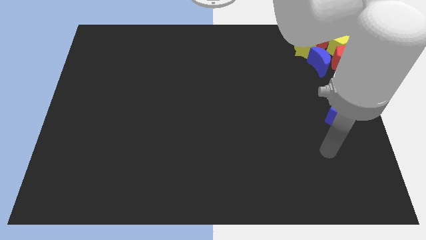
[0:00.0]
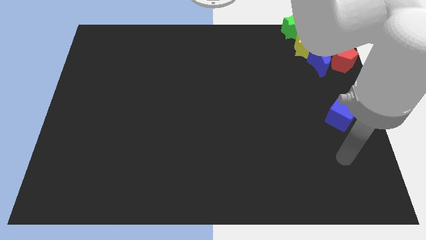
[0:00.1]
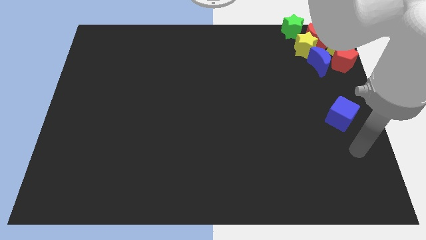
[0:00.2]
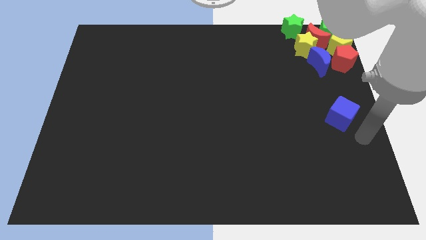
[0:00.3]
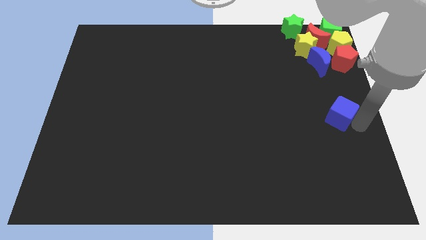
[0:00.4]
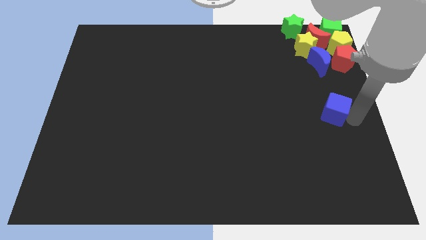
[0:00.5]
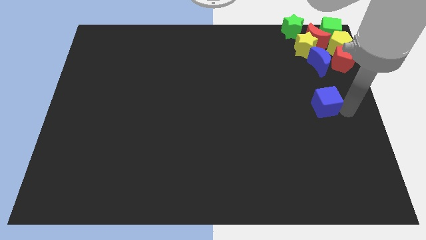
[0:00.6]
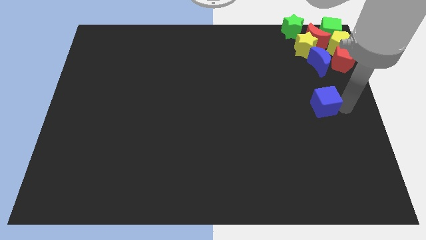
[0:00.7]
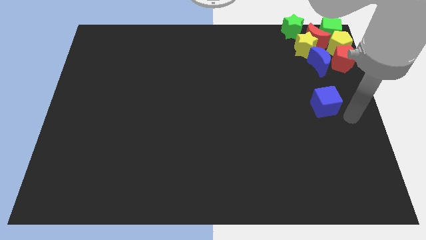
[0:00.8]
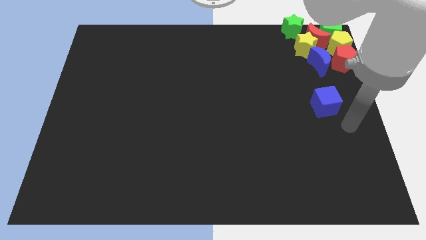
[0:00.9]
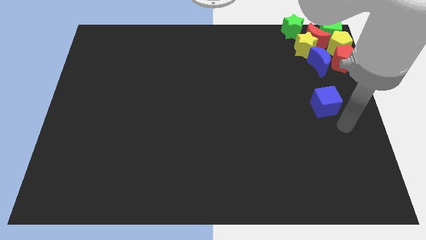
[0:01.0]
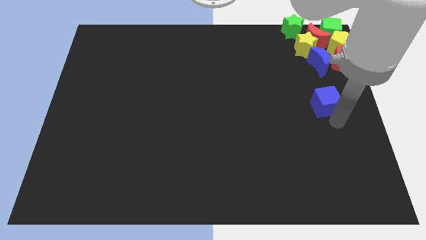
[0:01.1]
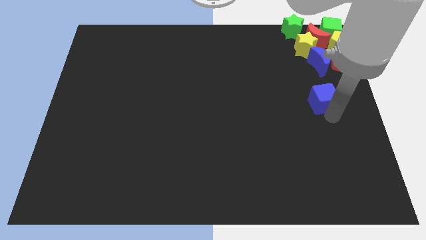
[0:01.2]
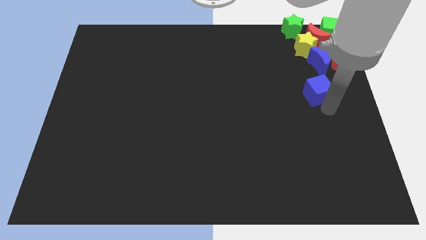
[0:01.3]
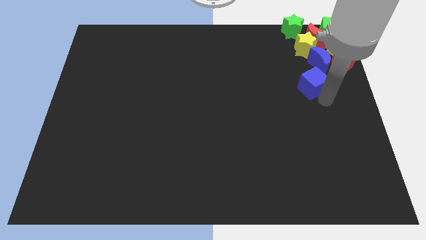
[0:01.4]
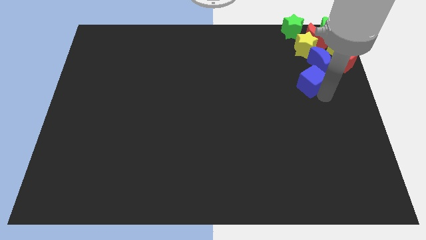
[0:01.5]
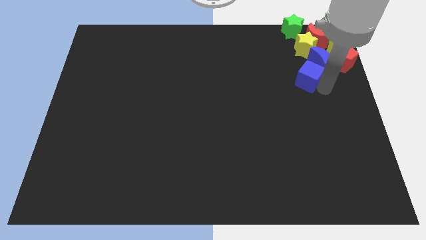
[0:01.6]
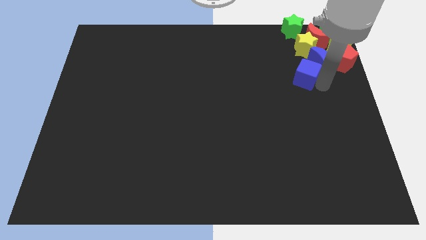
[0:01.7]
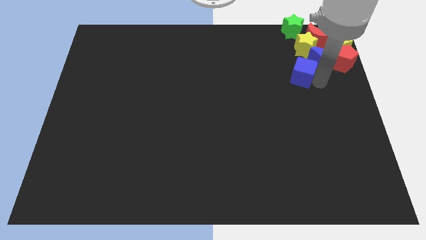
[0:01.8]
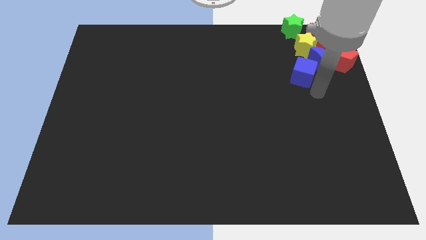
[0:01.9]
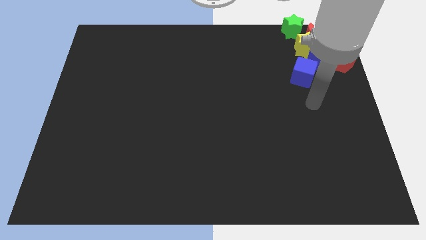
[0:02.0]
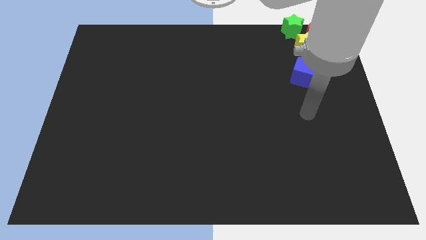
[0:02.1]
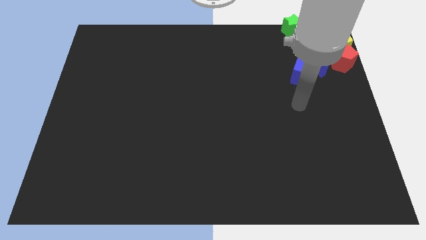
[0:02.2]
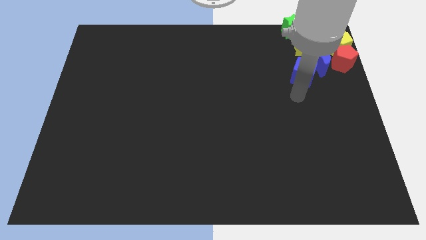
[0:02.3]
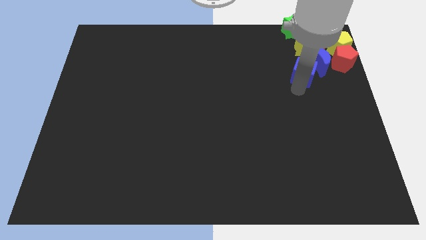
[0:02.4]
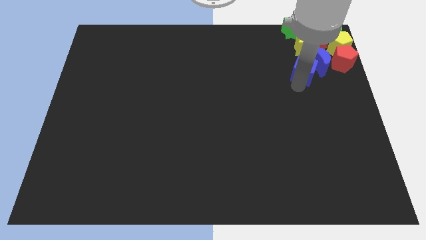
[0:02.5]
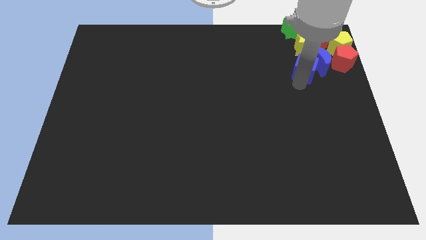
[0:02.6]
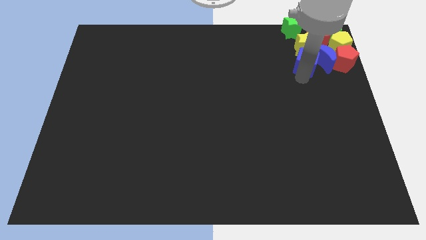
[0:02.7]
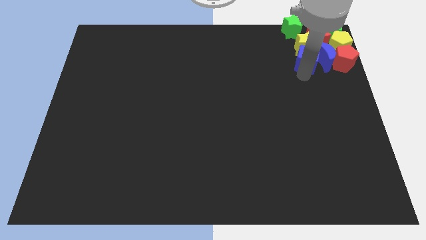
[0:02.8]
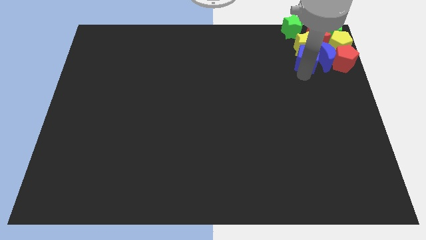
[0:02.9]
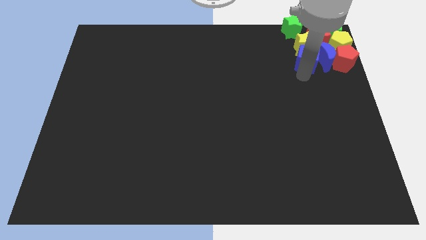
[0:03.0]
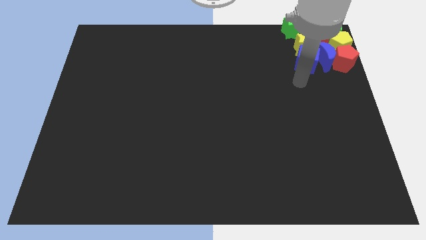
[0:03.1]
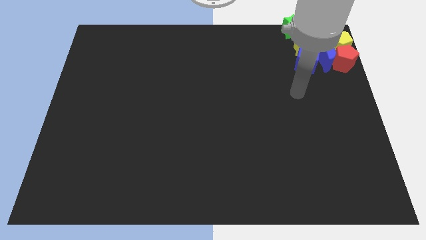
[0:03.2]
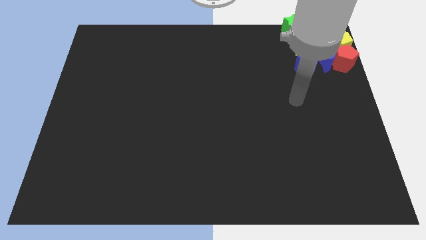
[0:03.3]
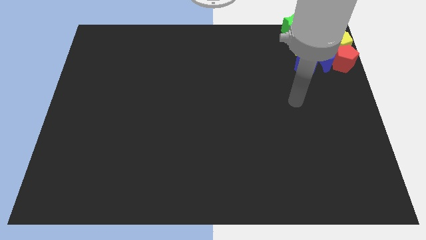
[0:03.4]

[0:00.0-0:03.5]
push the blue cube into the group of blocks

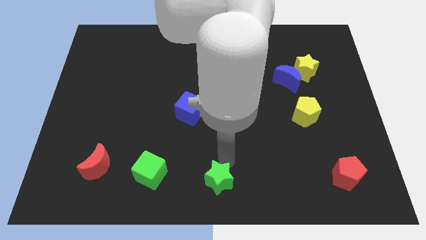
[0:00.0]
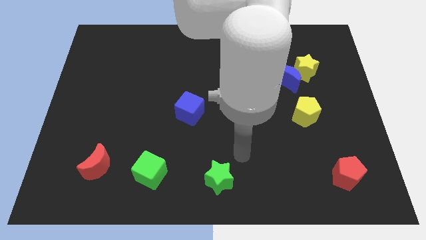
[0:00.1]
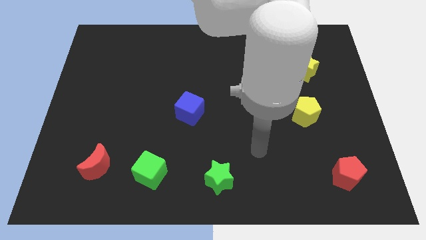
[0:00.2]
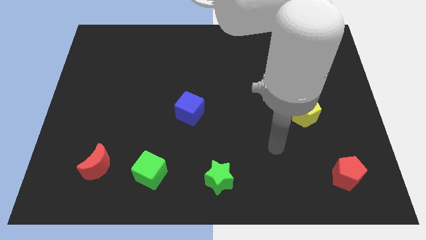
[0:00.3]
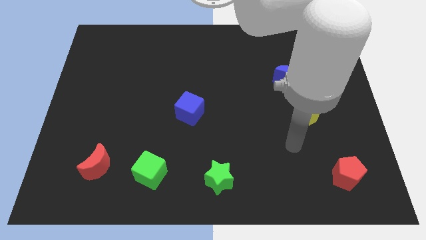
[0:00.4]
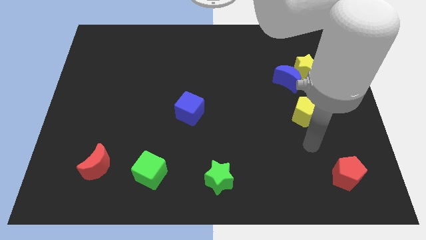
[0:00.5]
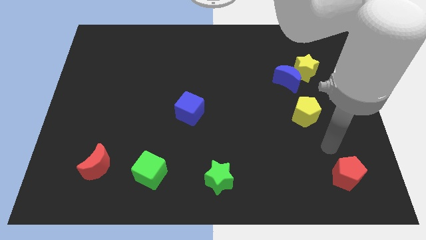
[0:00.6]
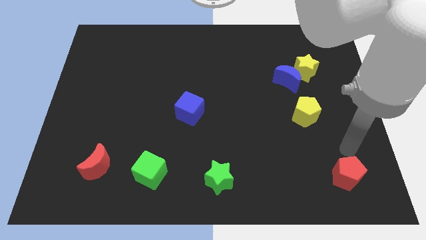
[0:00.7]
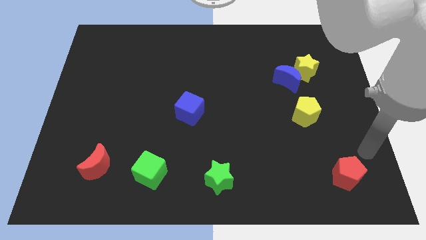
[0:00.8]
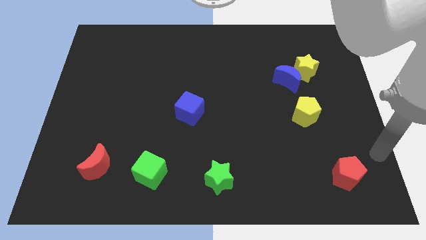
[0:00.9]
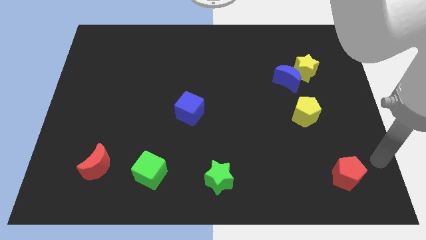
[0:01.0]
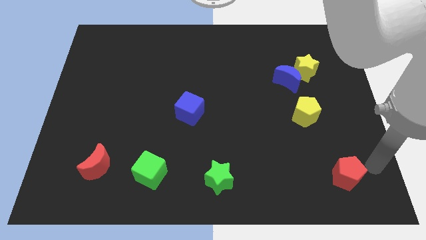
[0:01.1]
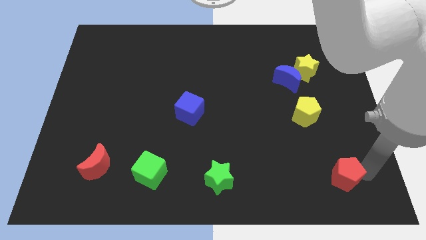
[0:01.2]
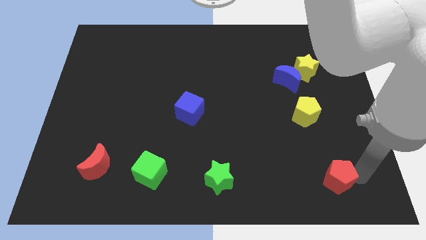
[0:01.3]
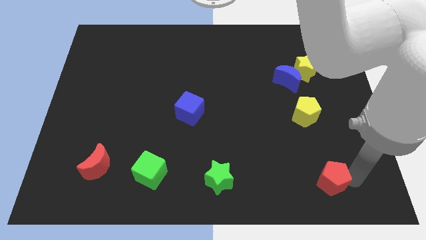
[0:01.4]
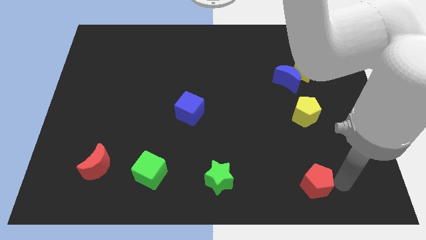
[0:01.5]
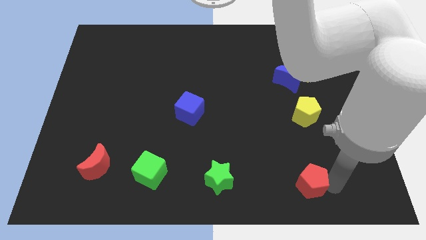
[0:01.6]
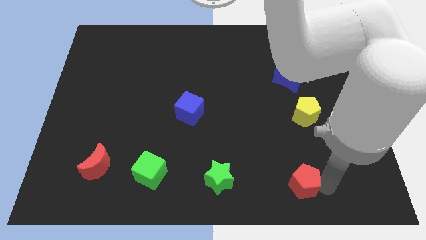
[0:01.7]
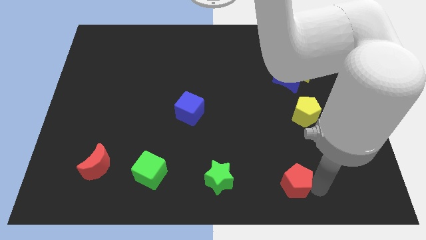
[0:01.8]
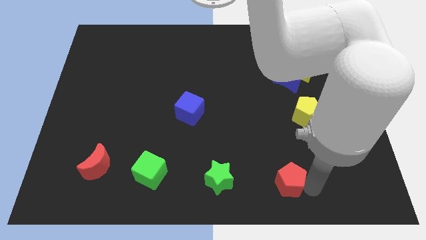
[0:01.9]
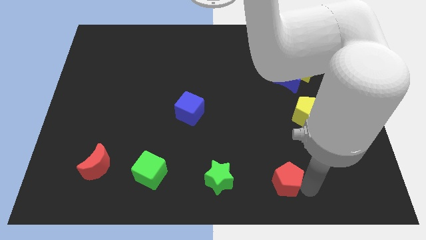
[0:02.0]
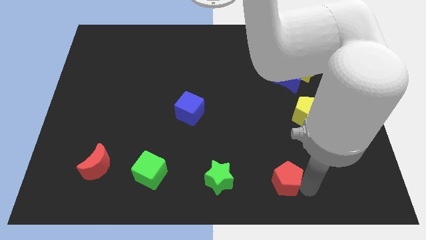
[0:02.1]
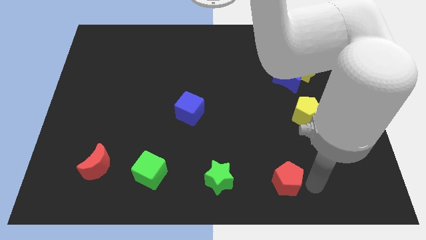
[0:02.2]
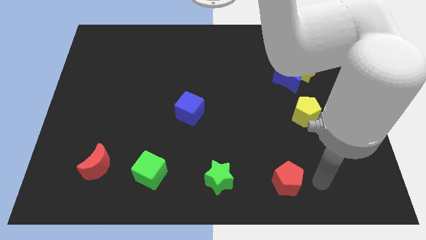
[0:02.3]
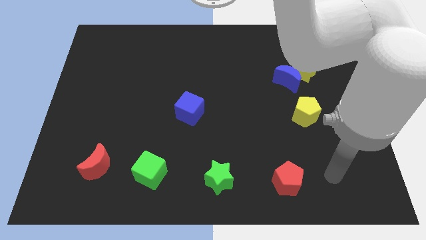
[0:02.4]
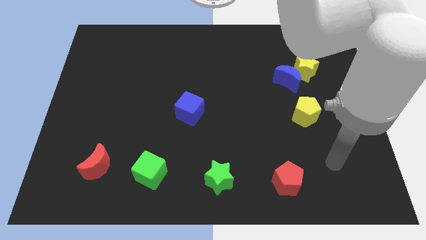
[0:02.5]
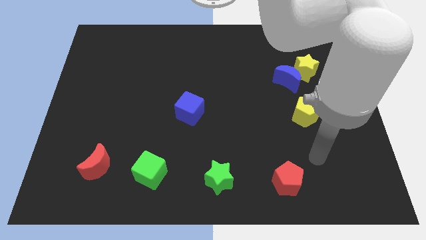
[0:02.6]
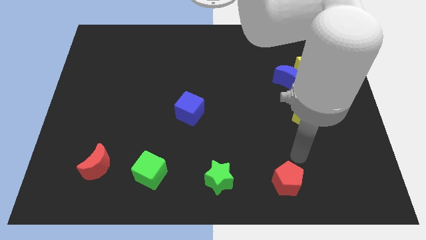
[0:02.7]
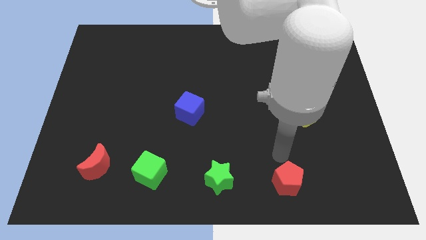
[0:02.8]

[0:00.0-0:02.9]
push the red pentagon horizontal parallel to the green star

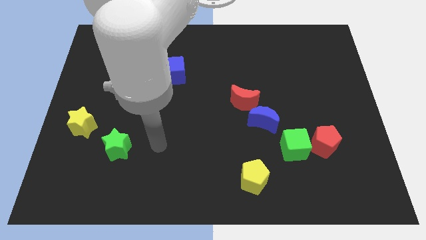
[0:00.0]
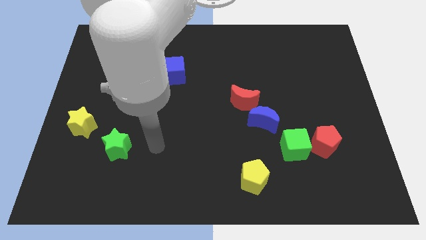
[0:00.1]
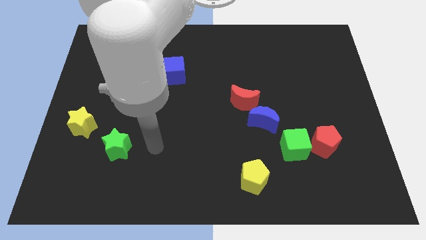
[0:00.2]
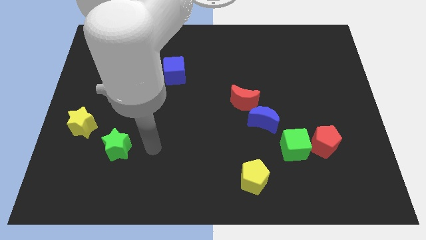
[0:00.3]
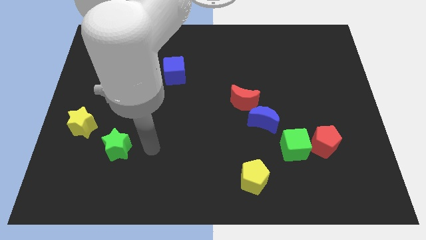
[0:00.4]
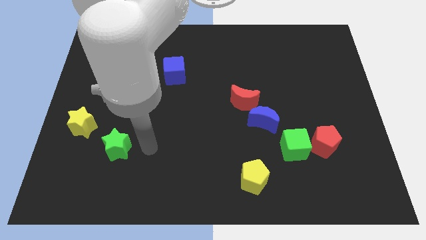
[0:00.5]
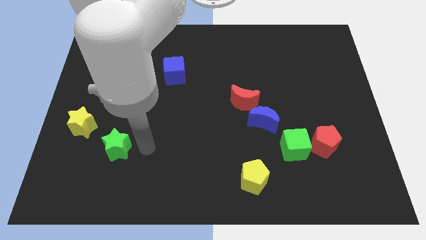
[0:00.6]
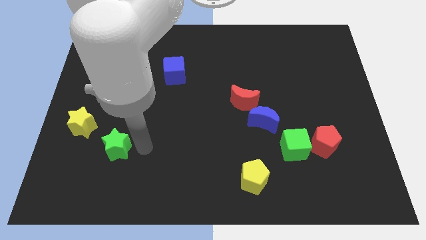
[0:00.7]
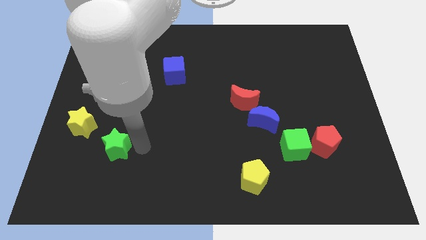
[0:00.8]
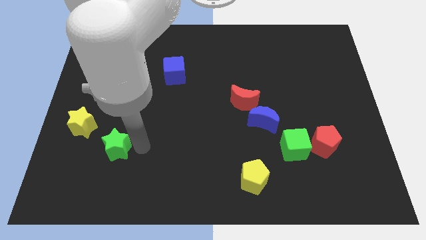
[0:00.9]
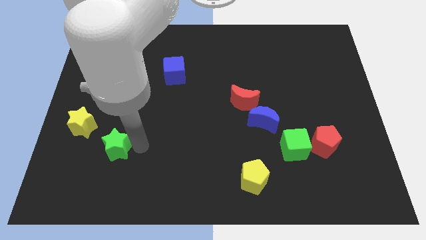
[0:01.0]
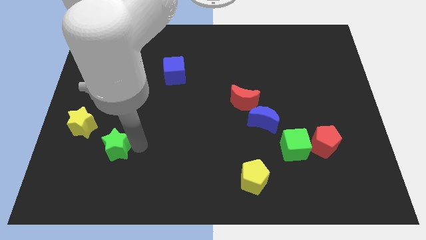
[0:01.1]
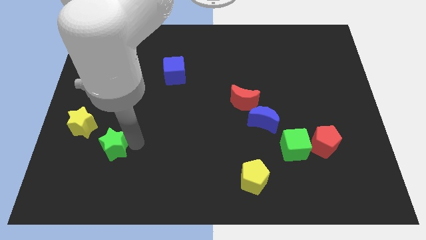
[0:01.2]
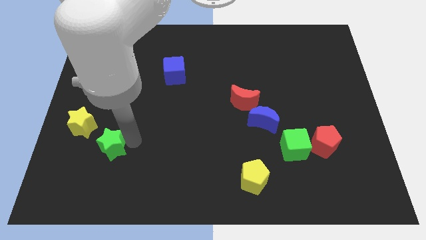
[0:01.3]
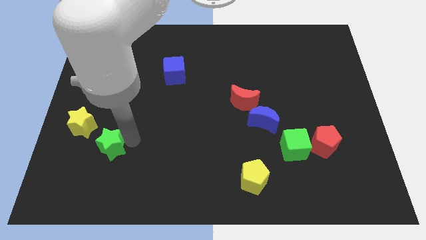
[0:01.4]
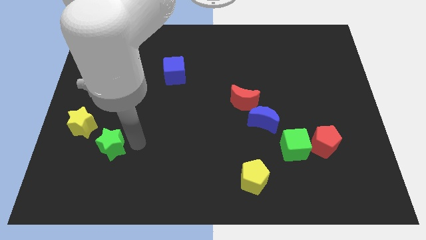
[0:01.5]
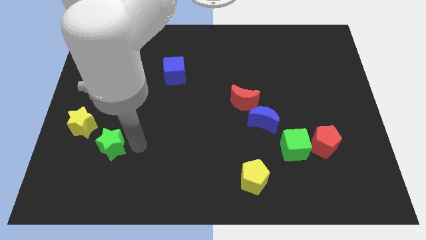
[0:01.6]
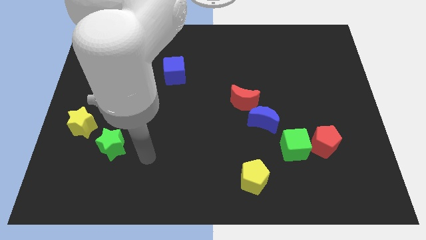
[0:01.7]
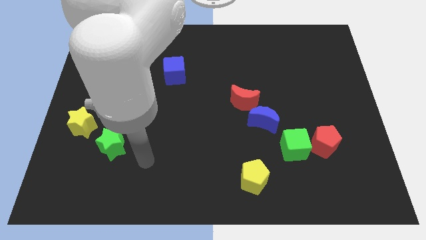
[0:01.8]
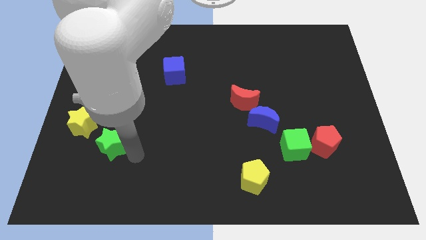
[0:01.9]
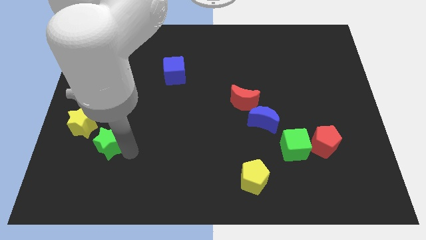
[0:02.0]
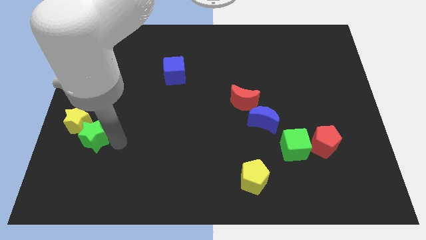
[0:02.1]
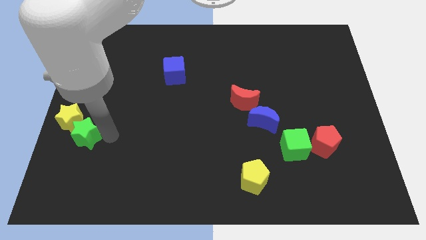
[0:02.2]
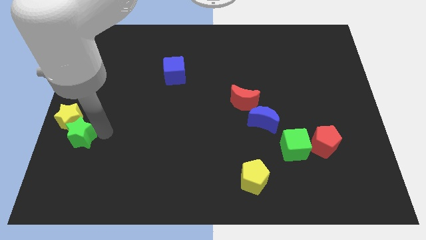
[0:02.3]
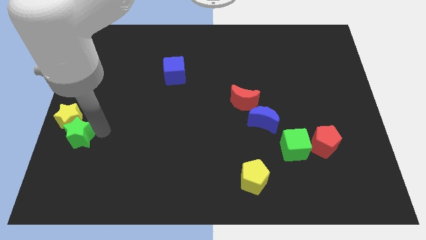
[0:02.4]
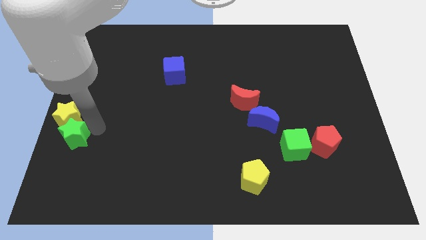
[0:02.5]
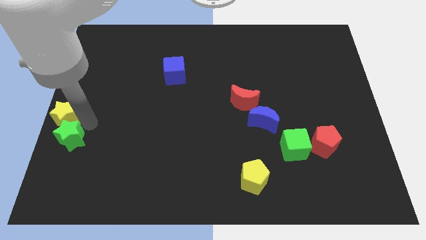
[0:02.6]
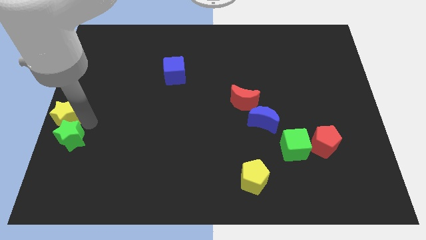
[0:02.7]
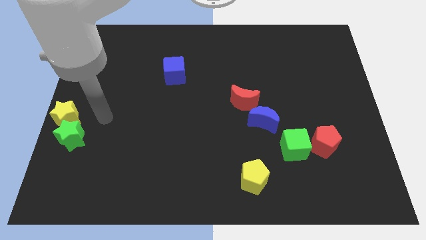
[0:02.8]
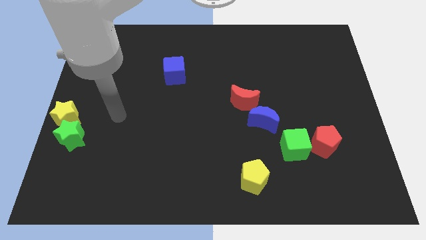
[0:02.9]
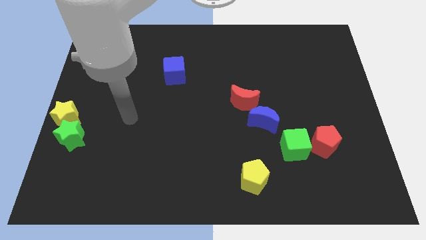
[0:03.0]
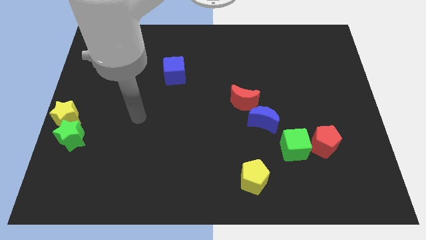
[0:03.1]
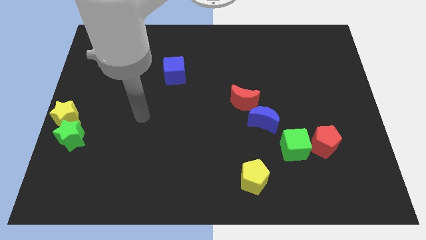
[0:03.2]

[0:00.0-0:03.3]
push green star at the bottom right of yellow star
